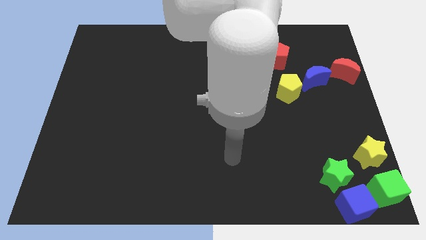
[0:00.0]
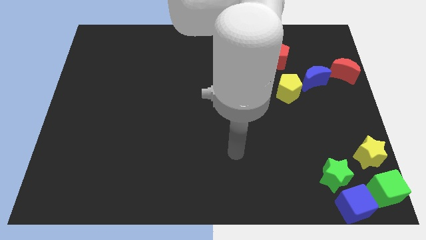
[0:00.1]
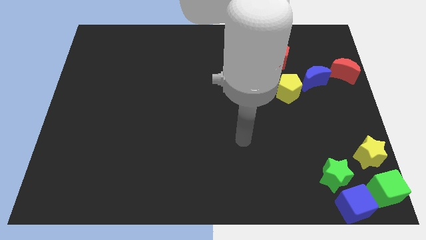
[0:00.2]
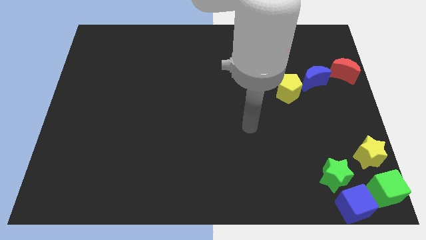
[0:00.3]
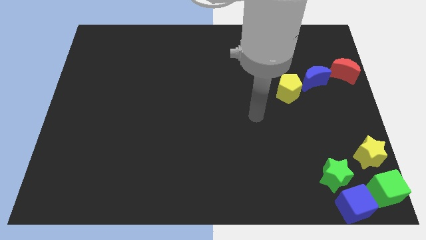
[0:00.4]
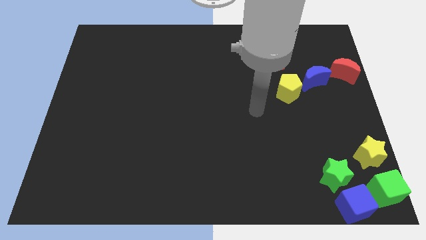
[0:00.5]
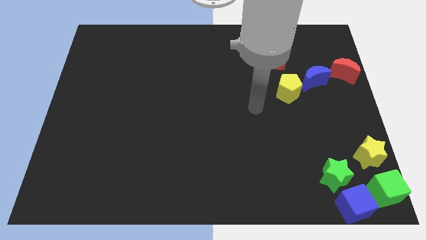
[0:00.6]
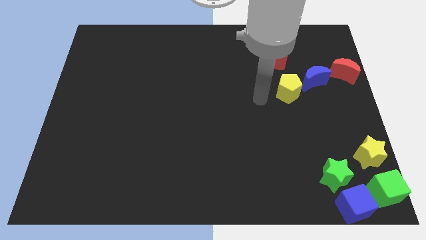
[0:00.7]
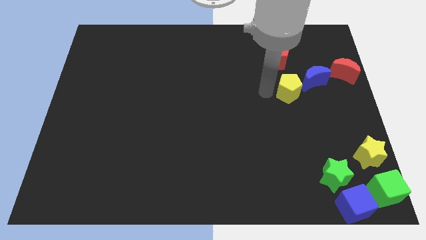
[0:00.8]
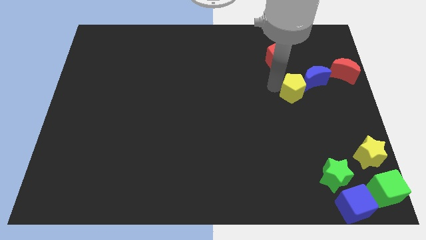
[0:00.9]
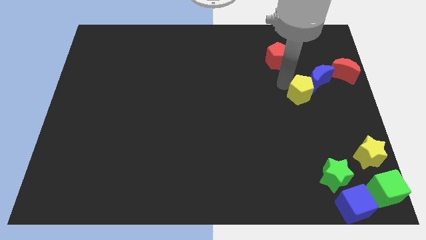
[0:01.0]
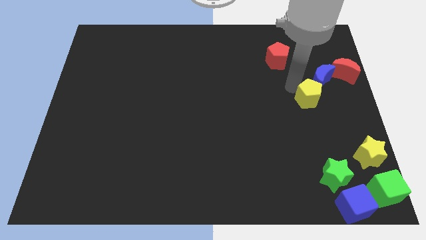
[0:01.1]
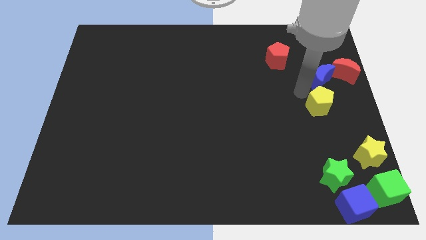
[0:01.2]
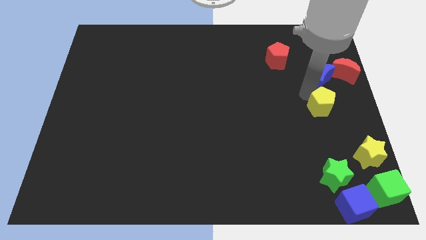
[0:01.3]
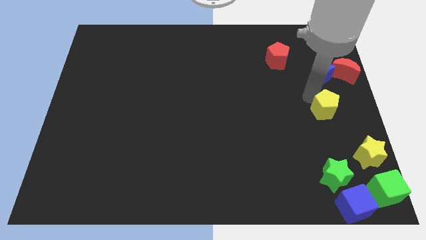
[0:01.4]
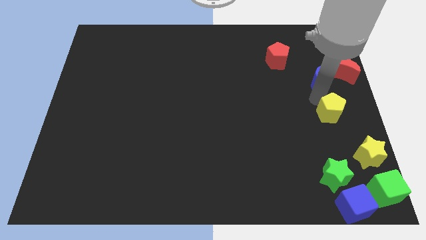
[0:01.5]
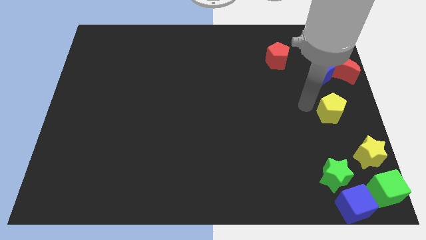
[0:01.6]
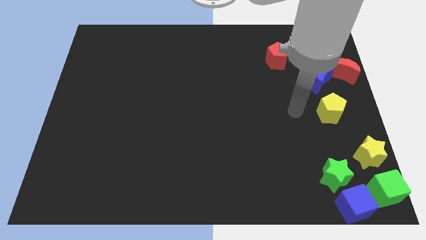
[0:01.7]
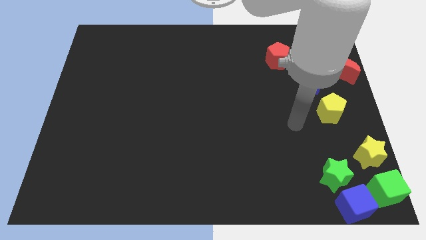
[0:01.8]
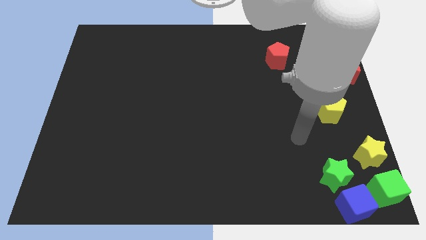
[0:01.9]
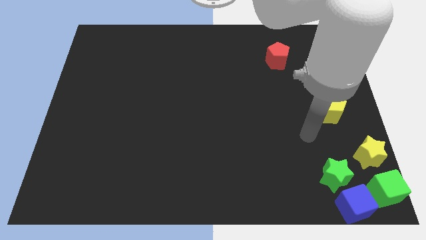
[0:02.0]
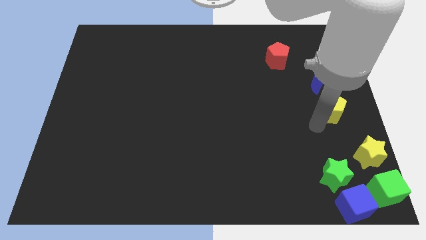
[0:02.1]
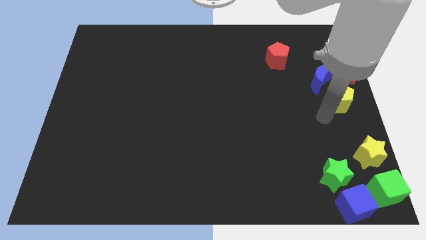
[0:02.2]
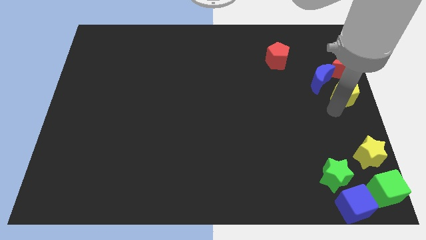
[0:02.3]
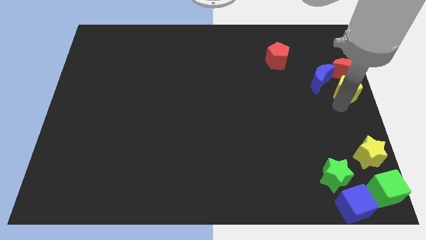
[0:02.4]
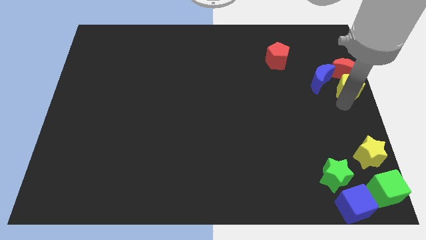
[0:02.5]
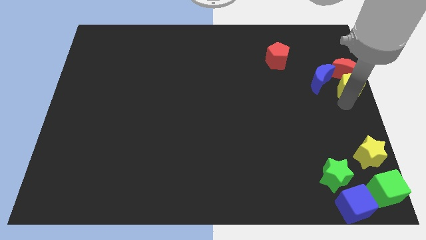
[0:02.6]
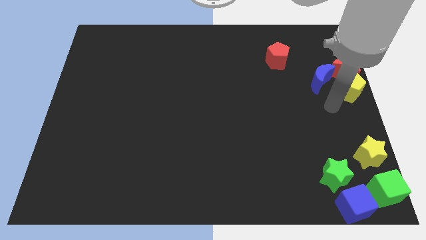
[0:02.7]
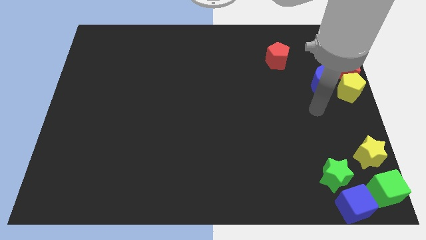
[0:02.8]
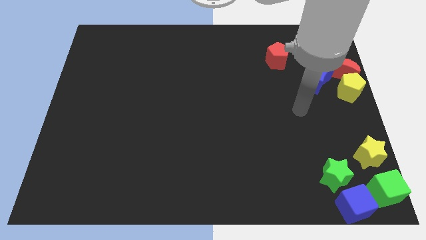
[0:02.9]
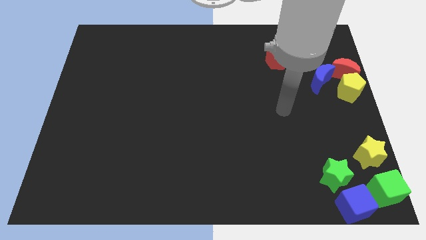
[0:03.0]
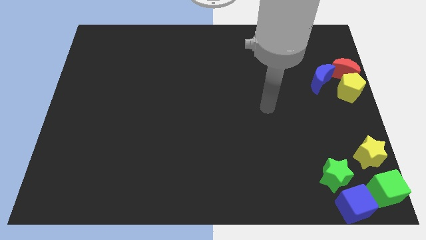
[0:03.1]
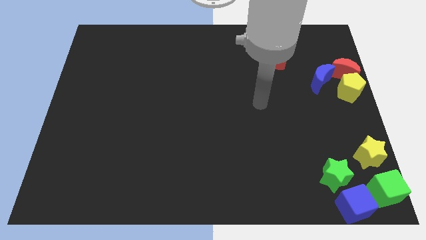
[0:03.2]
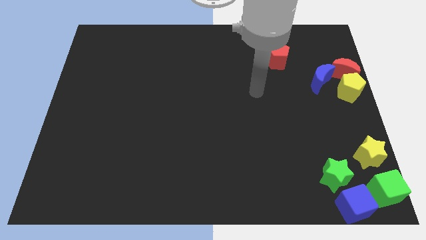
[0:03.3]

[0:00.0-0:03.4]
make a group of blocks with the yellow pentagon blue moon and red moon towards center right

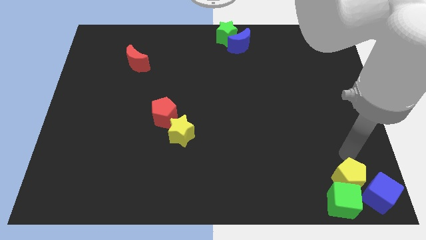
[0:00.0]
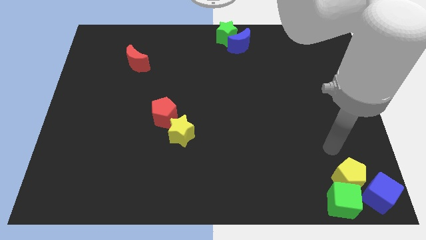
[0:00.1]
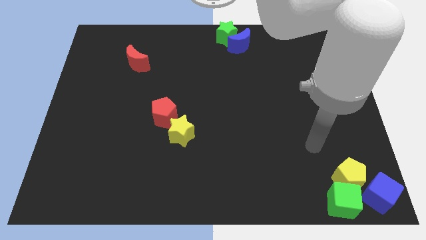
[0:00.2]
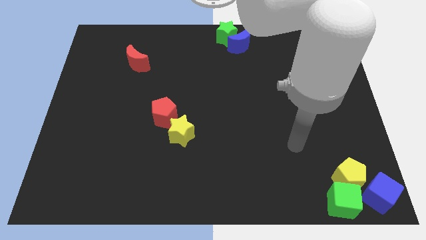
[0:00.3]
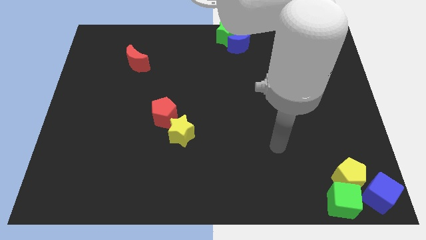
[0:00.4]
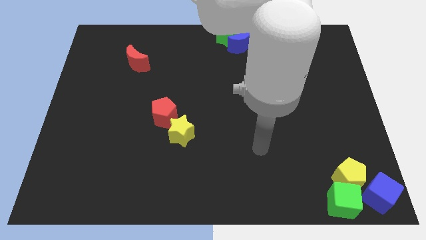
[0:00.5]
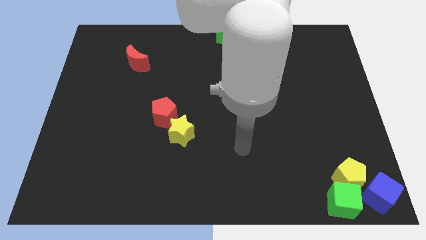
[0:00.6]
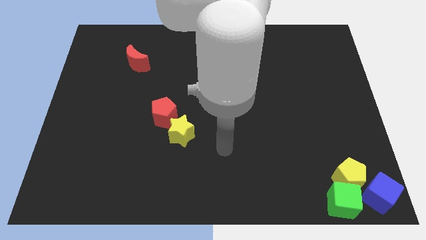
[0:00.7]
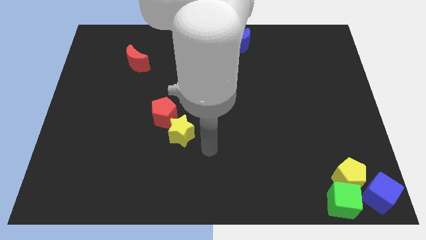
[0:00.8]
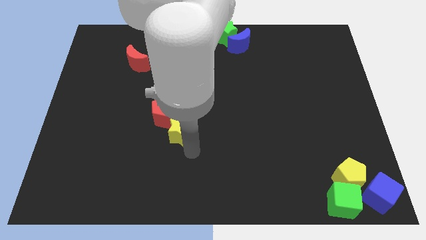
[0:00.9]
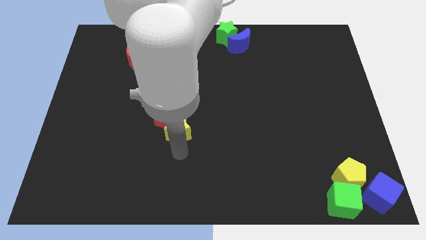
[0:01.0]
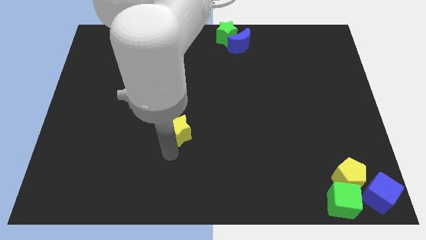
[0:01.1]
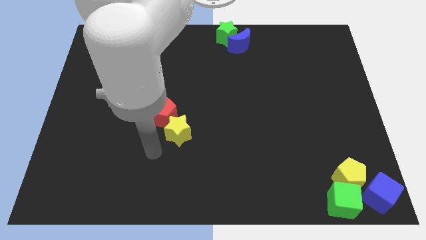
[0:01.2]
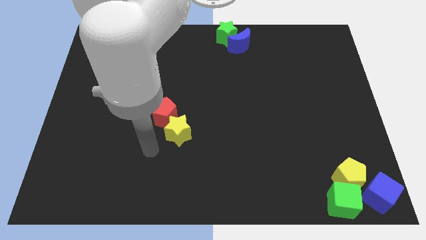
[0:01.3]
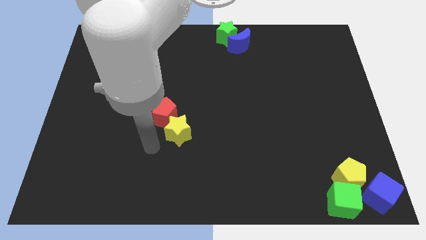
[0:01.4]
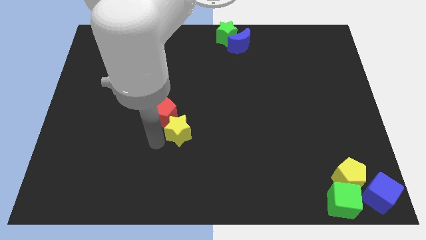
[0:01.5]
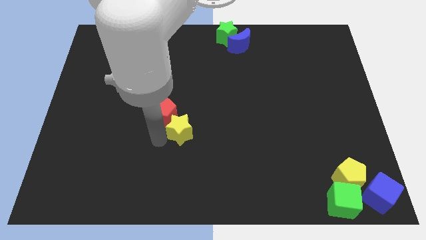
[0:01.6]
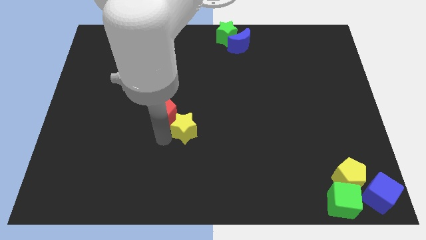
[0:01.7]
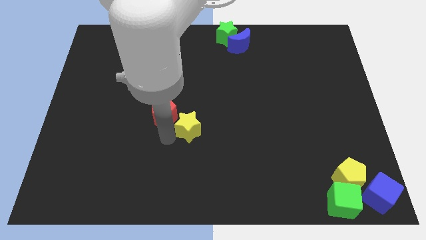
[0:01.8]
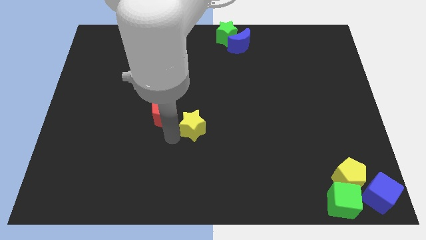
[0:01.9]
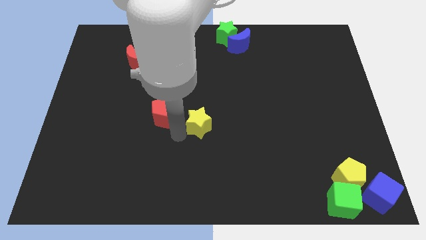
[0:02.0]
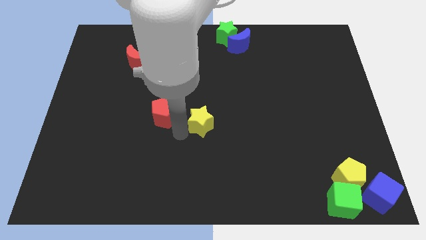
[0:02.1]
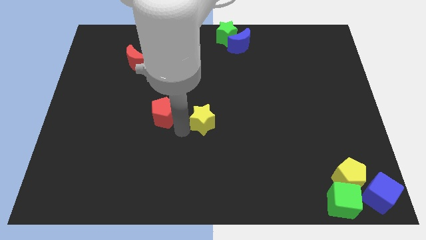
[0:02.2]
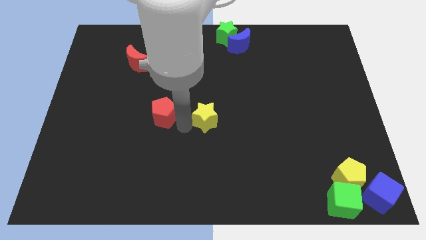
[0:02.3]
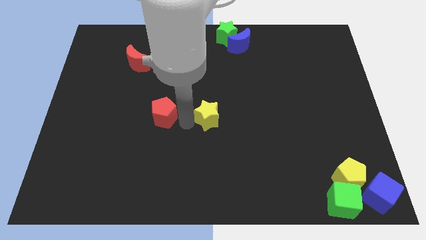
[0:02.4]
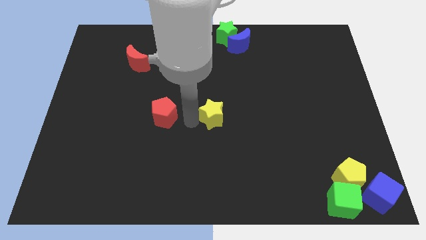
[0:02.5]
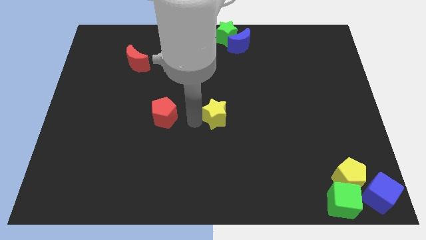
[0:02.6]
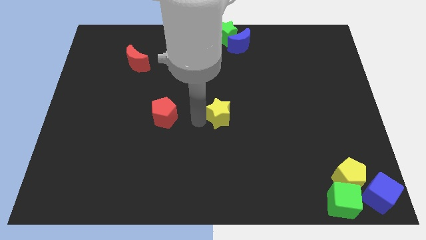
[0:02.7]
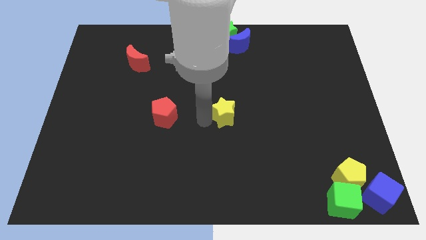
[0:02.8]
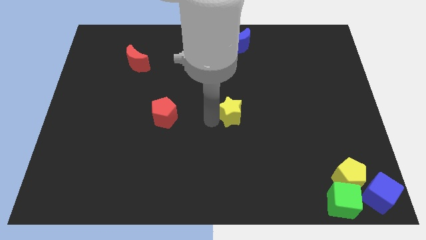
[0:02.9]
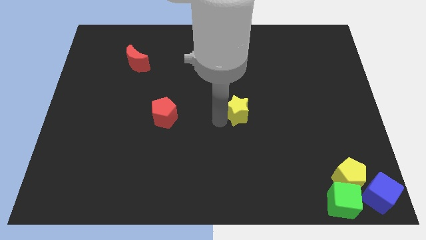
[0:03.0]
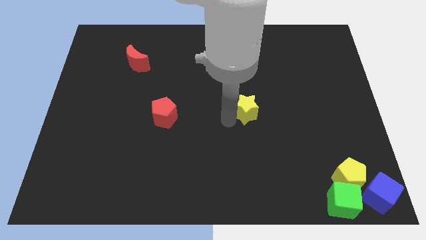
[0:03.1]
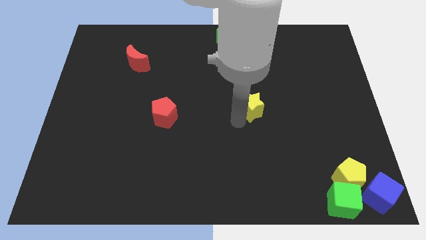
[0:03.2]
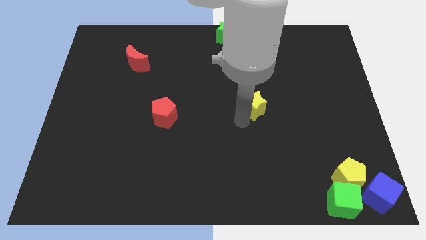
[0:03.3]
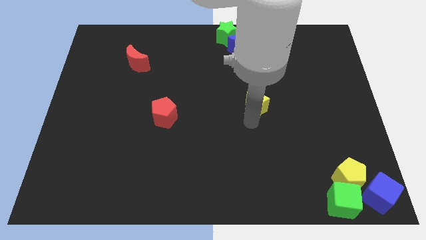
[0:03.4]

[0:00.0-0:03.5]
separate the yellow star from red pentagon

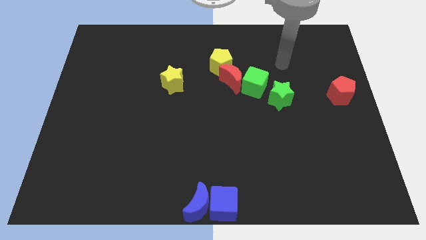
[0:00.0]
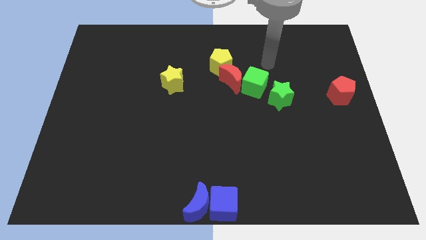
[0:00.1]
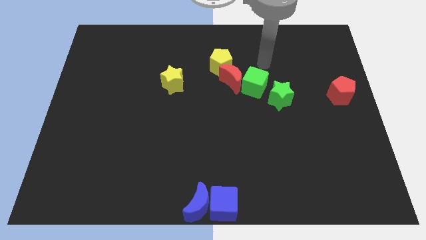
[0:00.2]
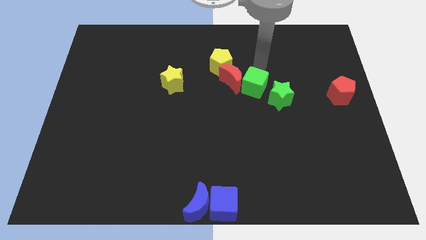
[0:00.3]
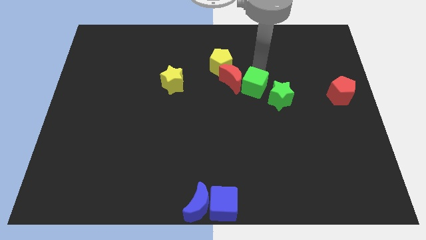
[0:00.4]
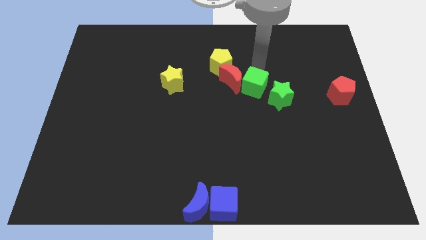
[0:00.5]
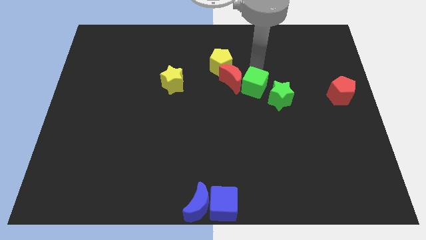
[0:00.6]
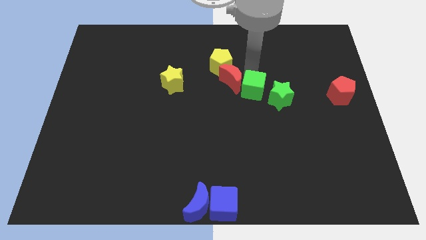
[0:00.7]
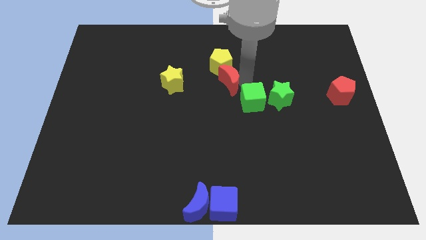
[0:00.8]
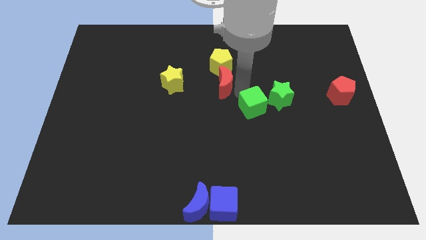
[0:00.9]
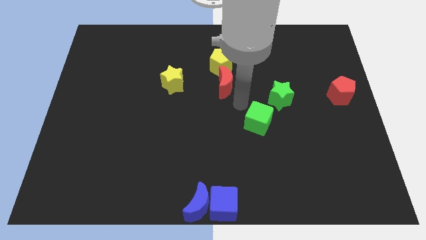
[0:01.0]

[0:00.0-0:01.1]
push the green cube away from the red crescent

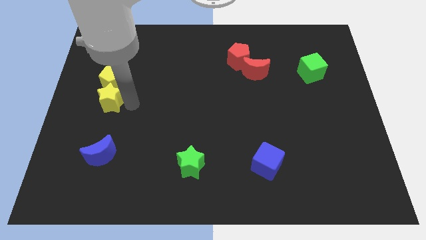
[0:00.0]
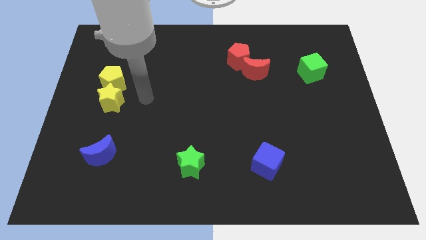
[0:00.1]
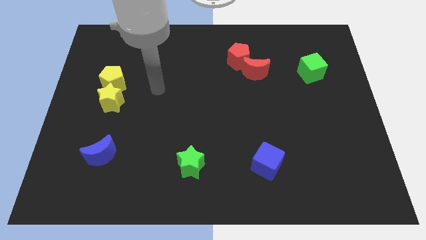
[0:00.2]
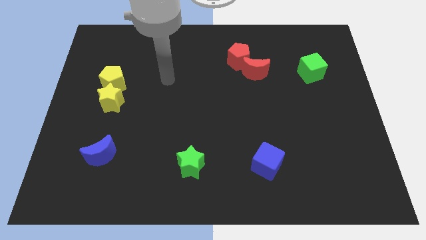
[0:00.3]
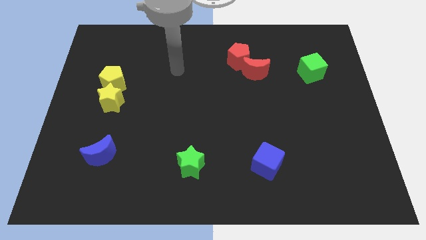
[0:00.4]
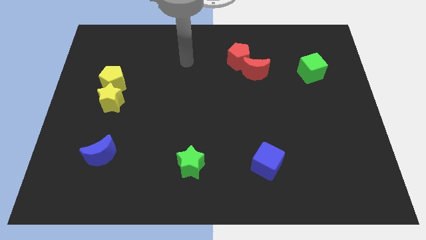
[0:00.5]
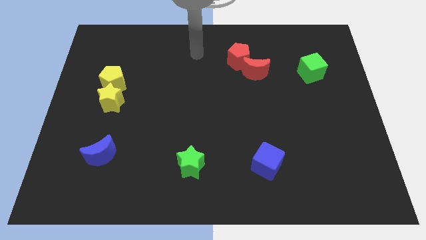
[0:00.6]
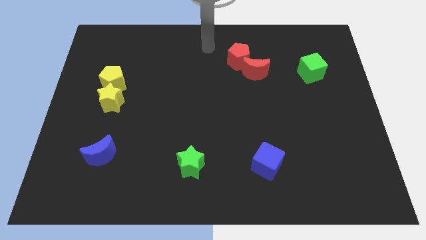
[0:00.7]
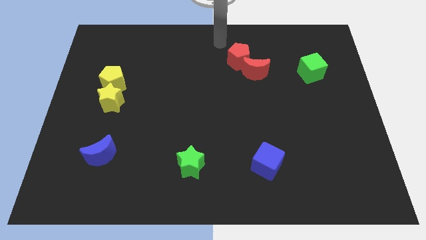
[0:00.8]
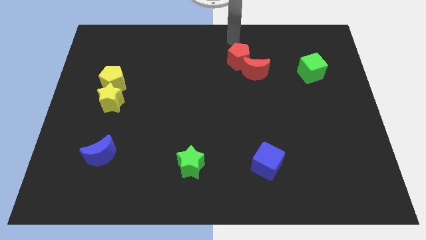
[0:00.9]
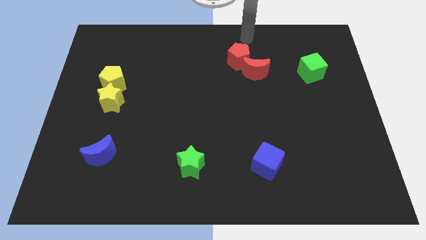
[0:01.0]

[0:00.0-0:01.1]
place your hand above the red pentagon
